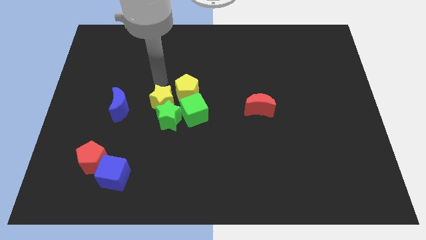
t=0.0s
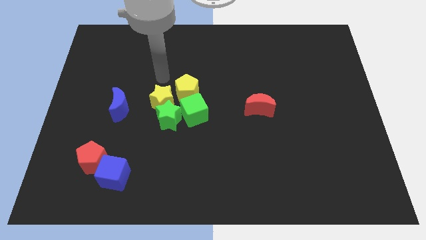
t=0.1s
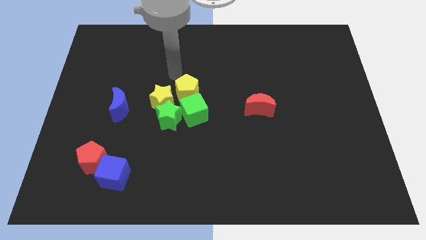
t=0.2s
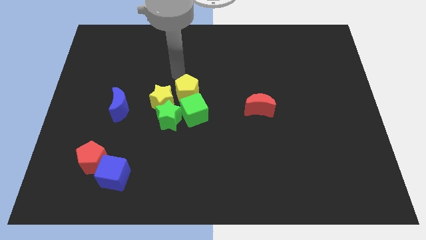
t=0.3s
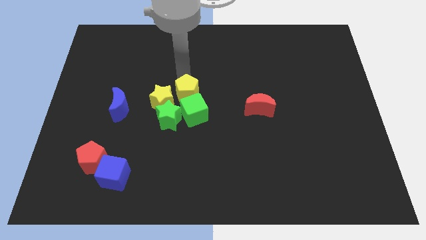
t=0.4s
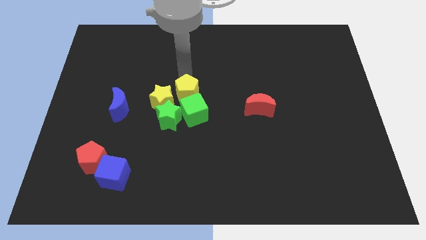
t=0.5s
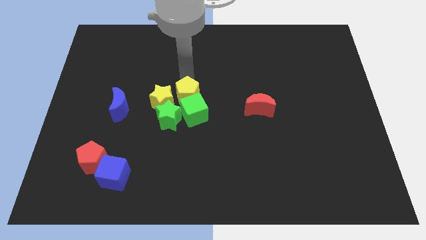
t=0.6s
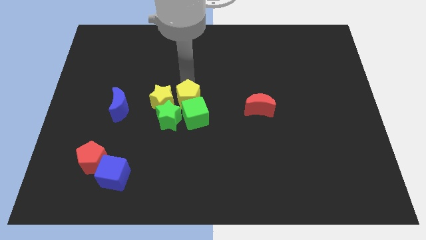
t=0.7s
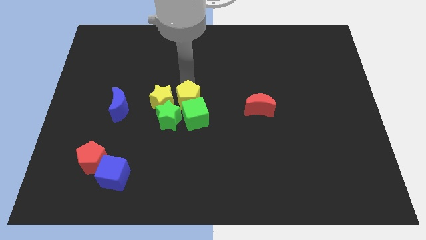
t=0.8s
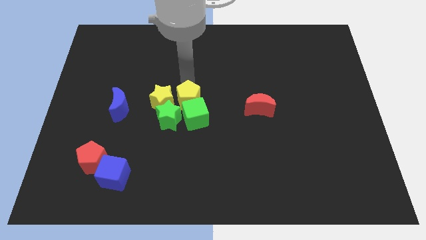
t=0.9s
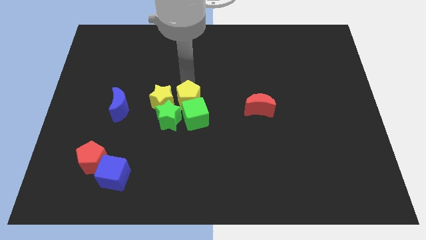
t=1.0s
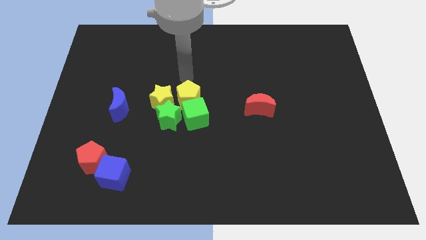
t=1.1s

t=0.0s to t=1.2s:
push the yellow pentagon into the green cube

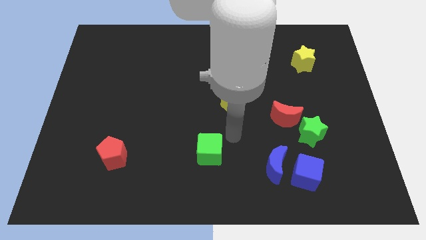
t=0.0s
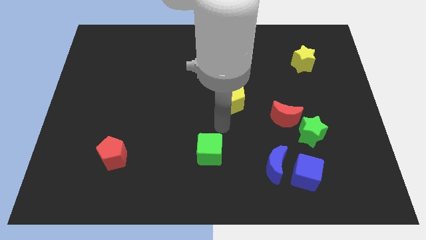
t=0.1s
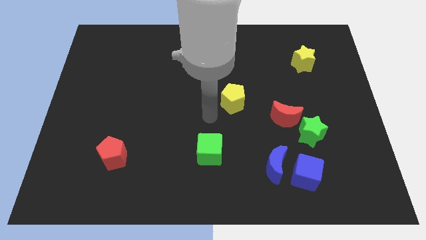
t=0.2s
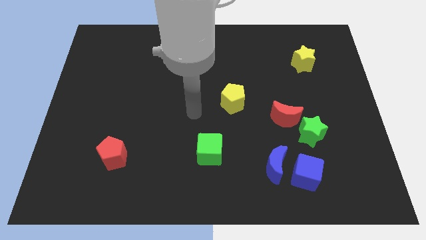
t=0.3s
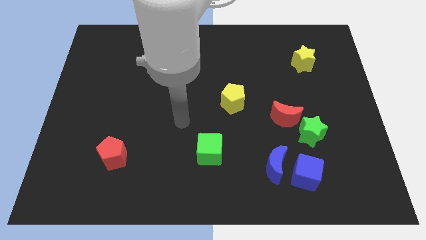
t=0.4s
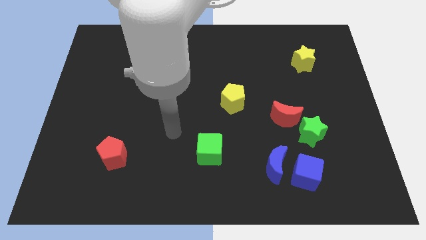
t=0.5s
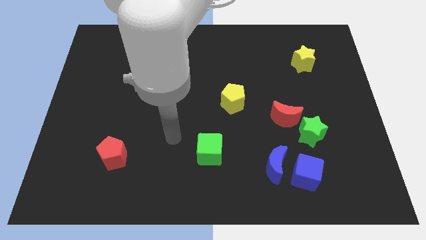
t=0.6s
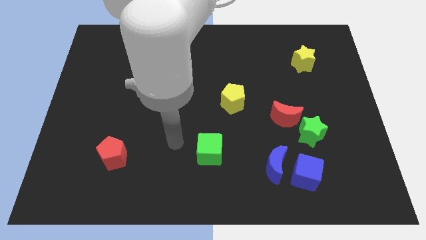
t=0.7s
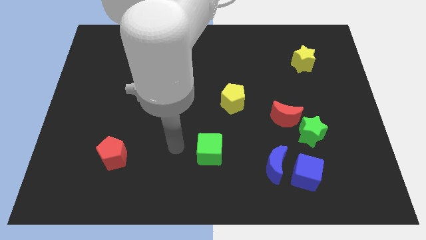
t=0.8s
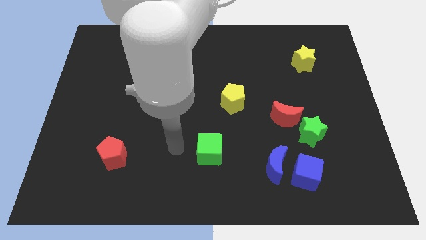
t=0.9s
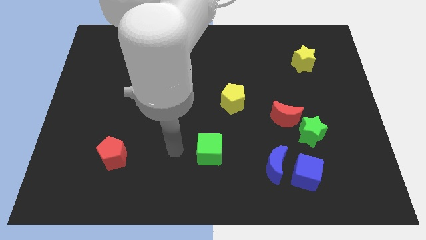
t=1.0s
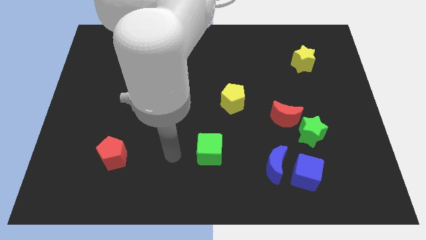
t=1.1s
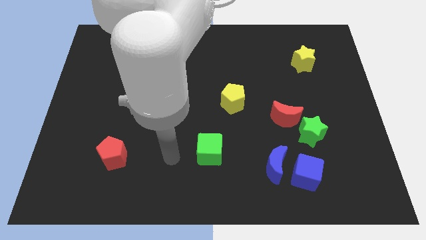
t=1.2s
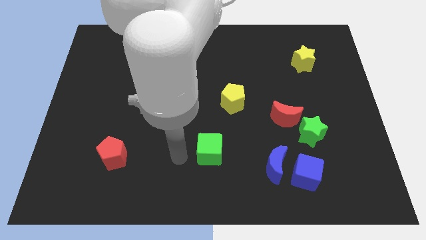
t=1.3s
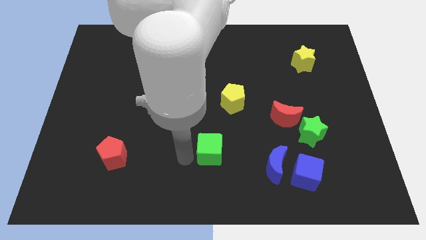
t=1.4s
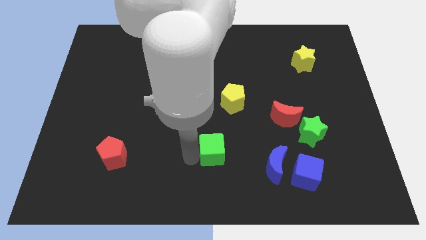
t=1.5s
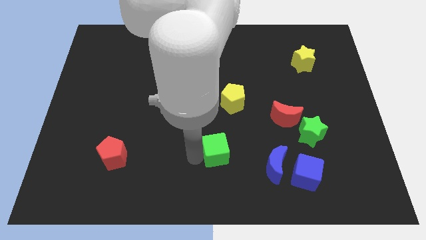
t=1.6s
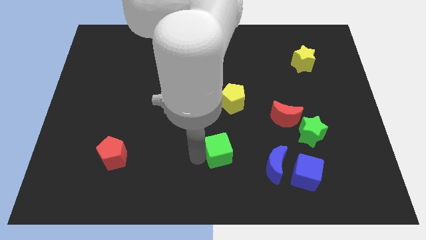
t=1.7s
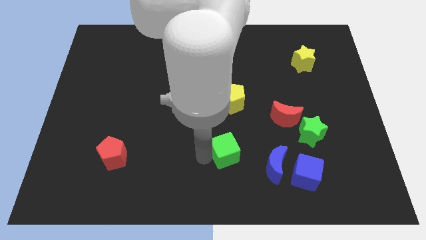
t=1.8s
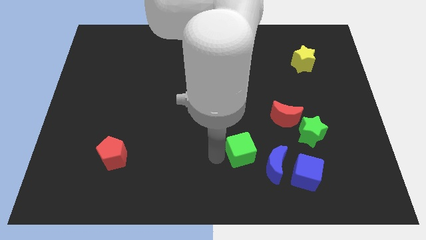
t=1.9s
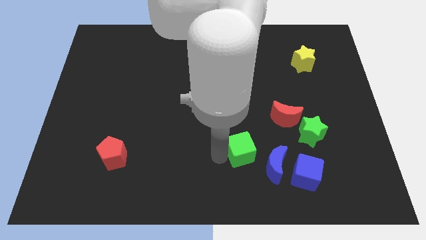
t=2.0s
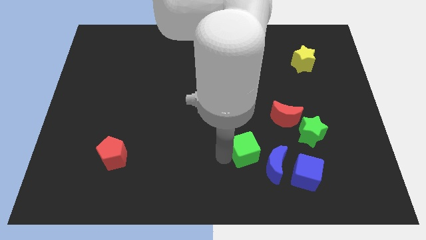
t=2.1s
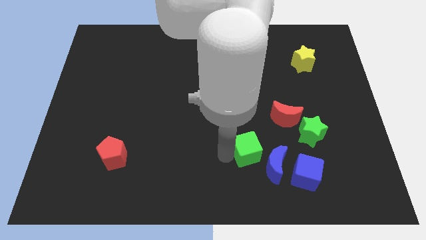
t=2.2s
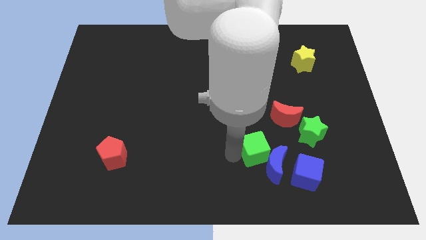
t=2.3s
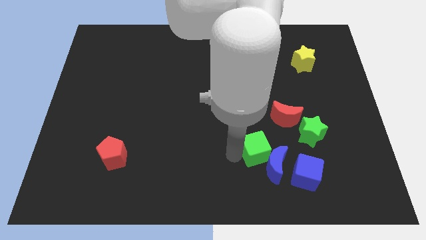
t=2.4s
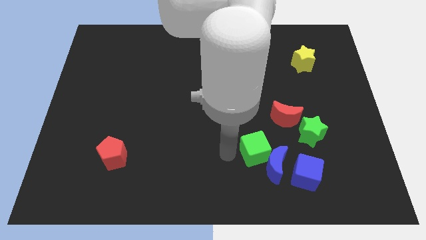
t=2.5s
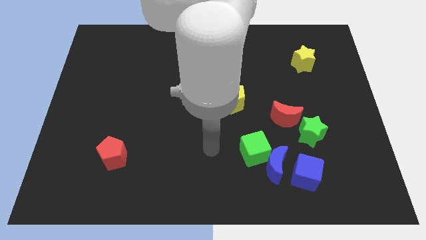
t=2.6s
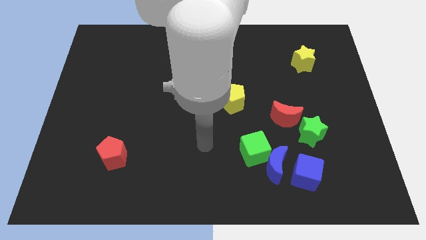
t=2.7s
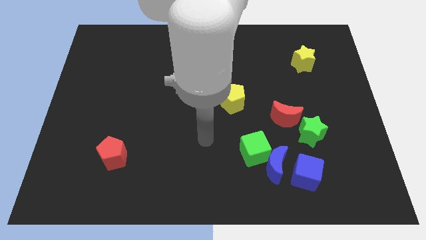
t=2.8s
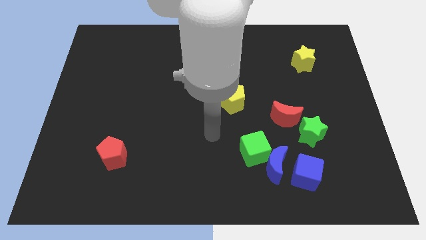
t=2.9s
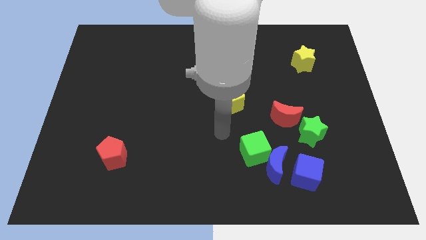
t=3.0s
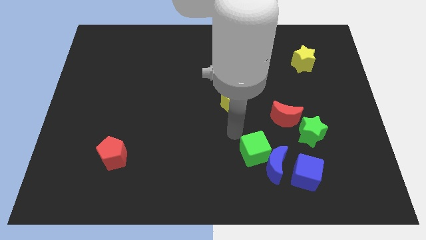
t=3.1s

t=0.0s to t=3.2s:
move green cube close to blue moon

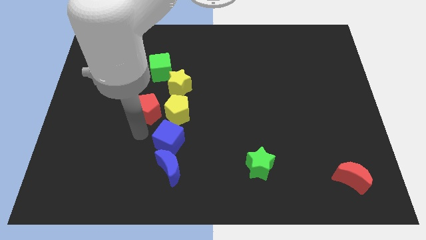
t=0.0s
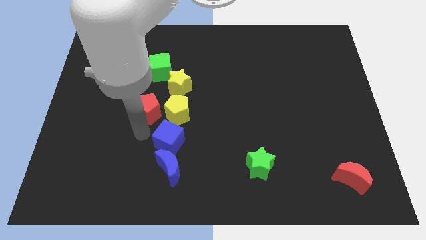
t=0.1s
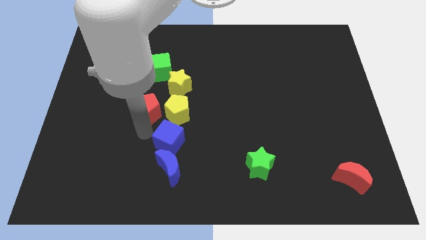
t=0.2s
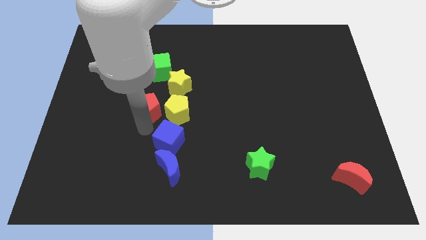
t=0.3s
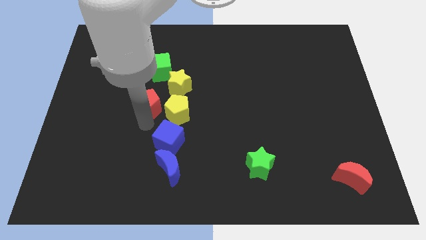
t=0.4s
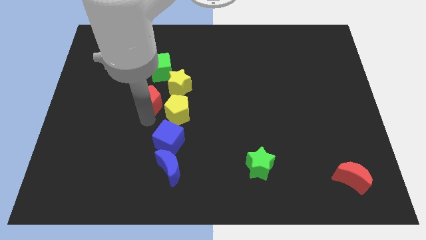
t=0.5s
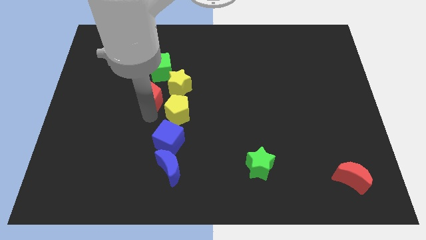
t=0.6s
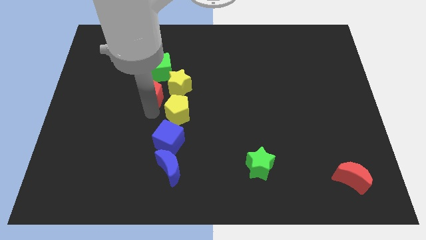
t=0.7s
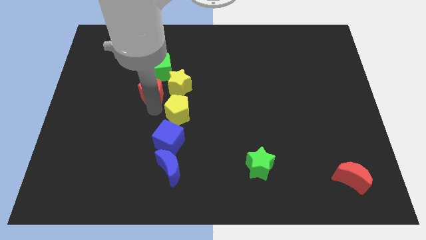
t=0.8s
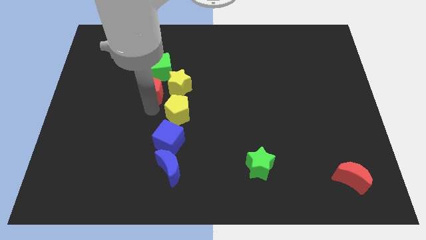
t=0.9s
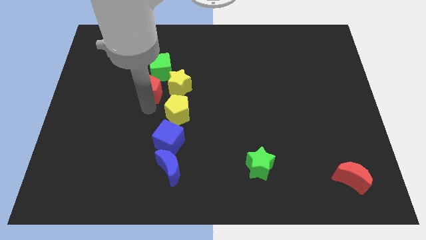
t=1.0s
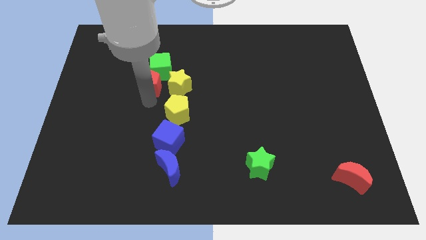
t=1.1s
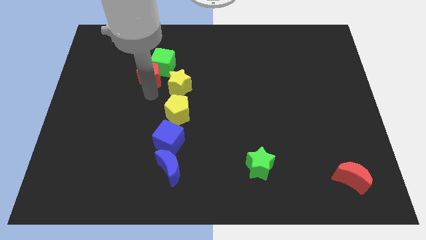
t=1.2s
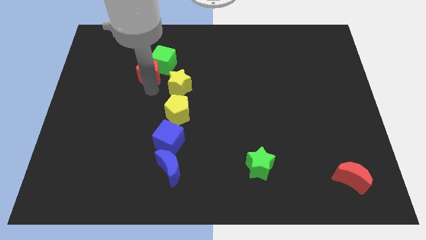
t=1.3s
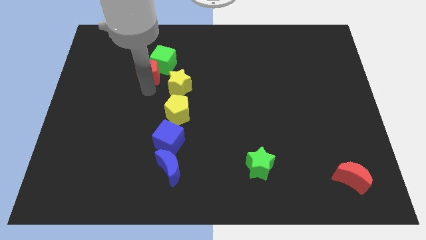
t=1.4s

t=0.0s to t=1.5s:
push red pentagon into green cube

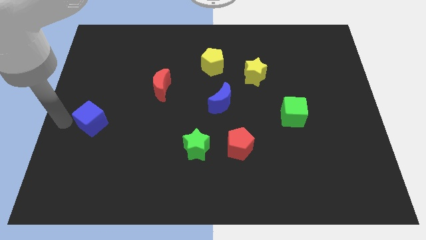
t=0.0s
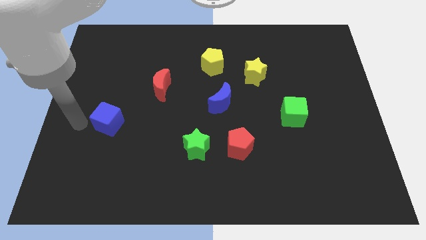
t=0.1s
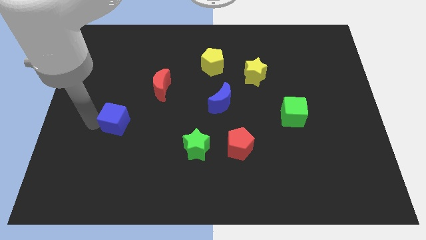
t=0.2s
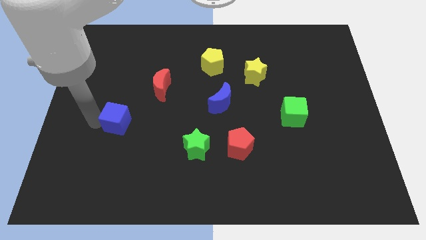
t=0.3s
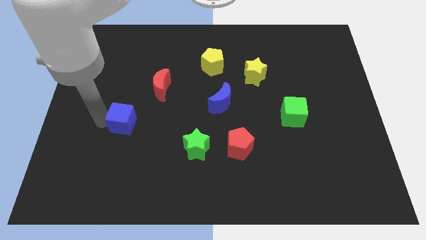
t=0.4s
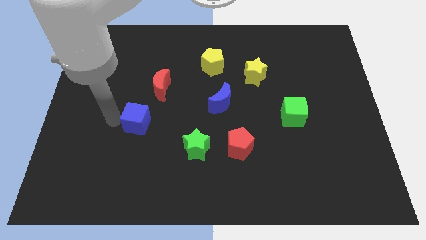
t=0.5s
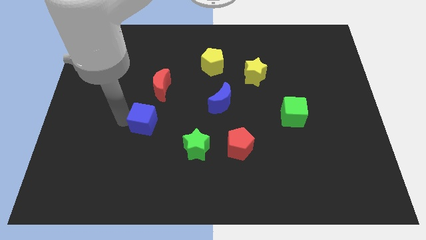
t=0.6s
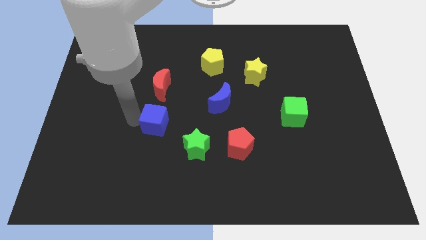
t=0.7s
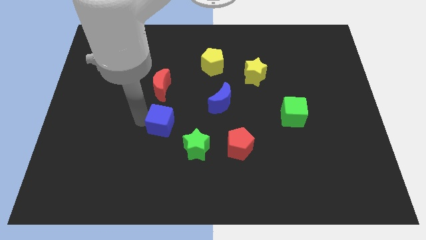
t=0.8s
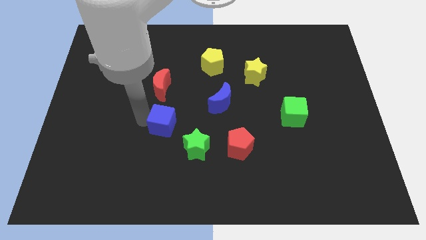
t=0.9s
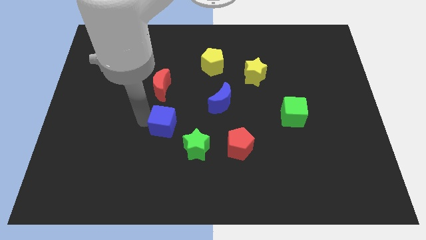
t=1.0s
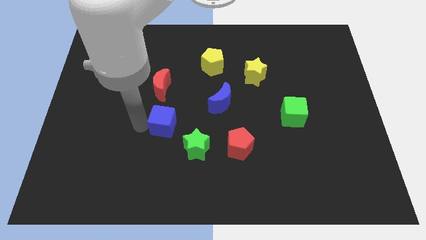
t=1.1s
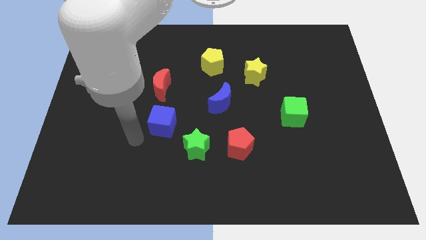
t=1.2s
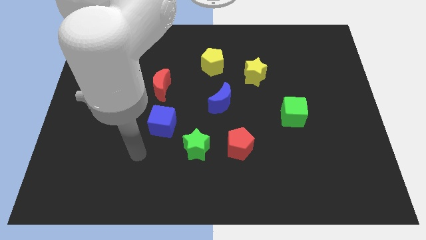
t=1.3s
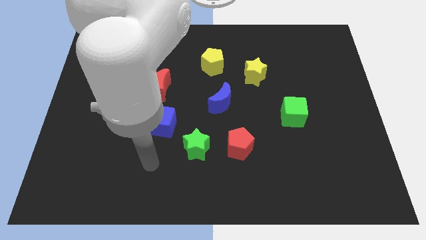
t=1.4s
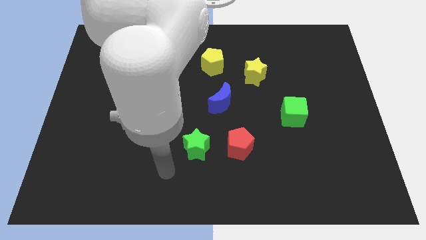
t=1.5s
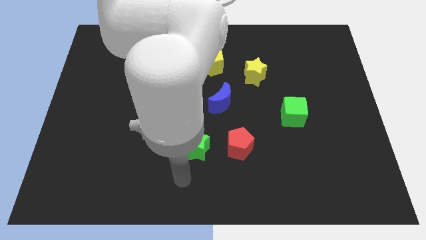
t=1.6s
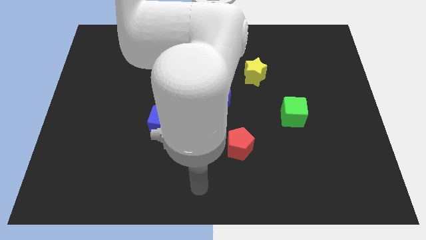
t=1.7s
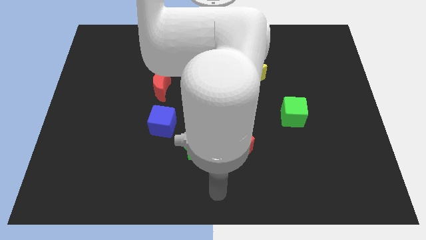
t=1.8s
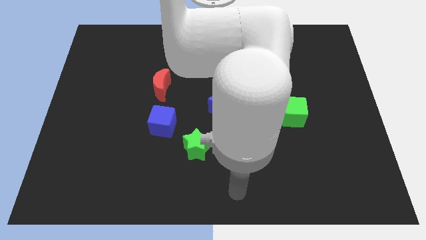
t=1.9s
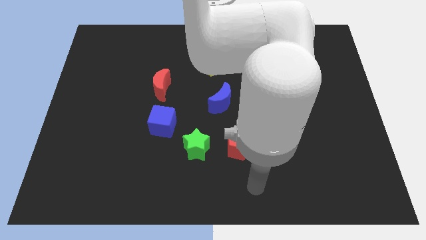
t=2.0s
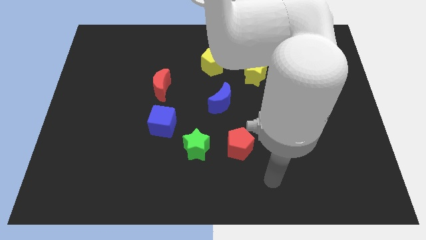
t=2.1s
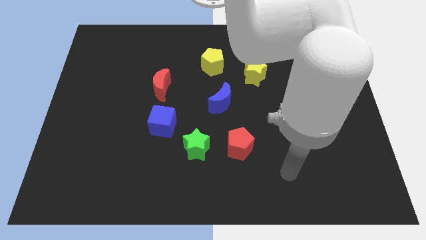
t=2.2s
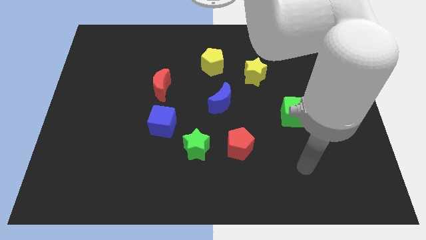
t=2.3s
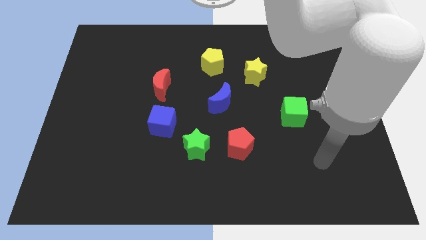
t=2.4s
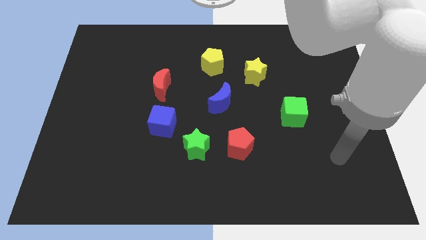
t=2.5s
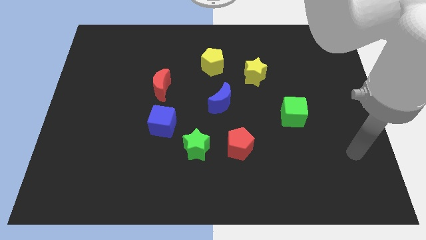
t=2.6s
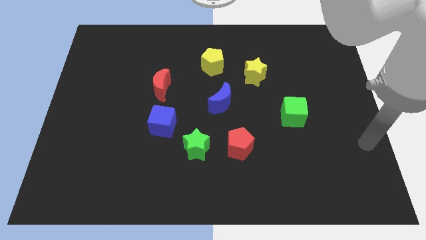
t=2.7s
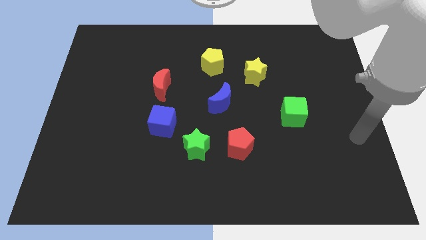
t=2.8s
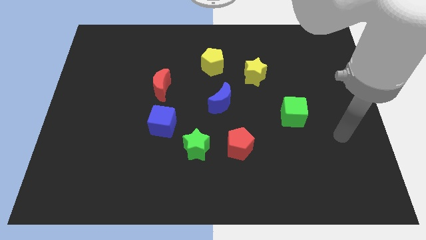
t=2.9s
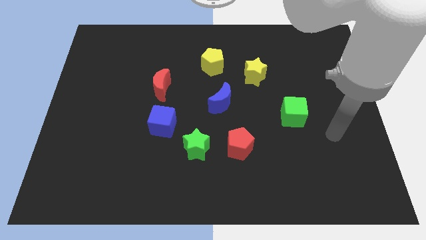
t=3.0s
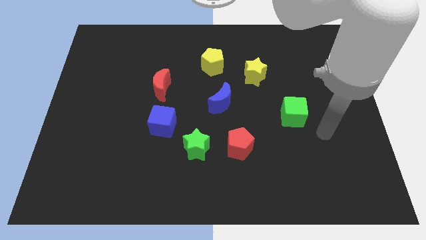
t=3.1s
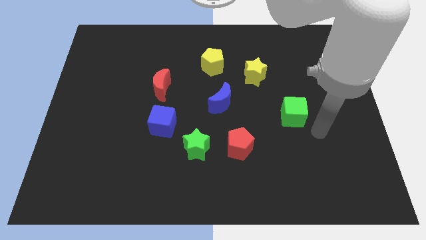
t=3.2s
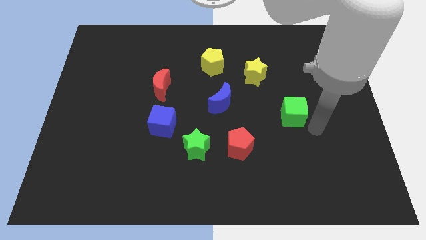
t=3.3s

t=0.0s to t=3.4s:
slide the blue cube to the bottom side of the red crescent
